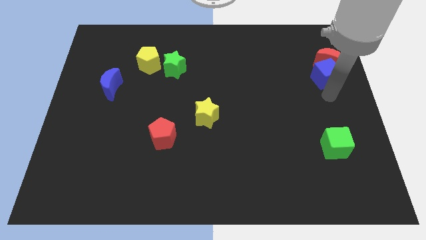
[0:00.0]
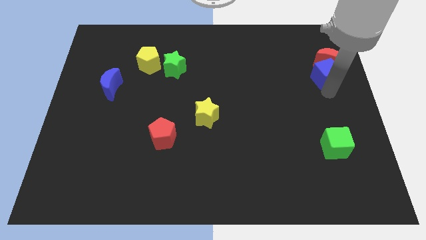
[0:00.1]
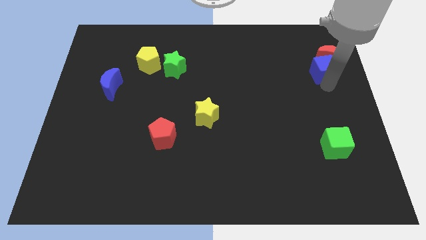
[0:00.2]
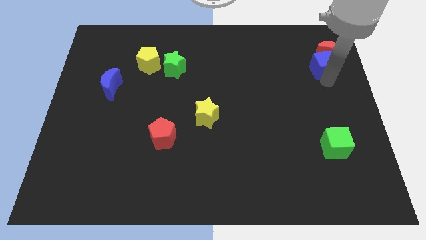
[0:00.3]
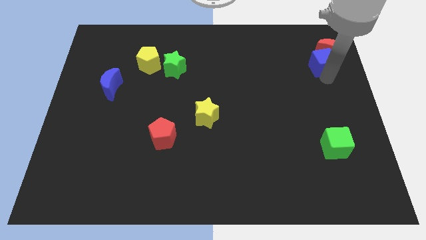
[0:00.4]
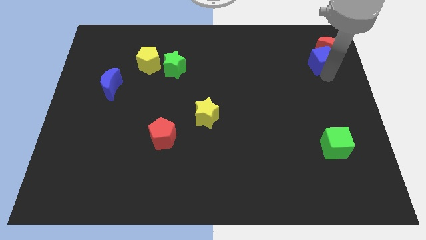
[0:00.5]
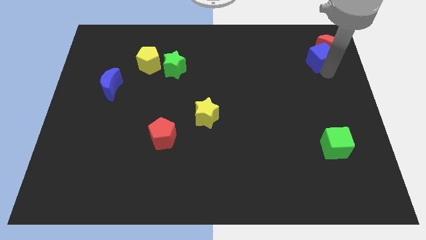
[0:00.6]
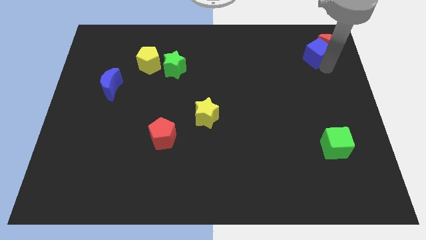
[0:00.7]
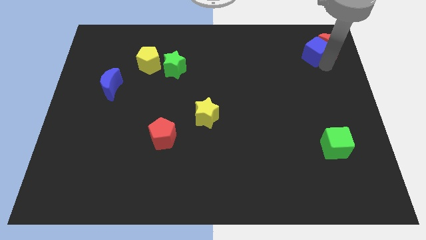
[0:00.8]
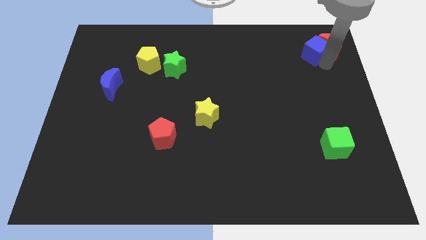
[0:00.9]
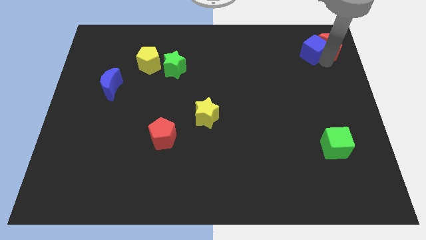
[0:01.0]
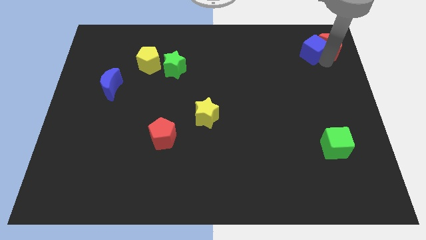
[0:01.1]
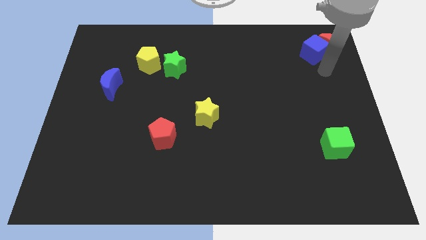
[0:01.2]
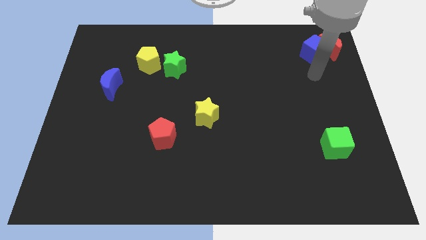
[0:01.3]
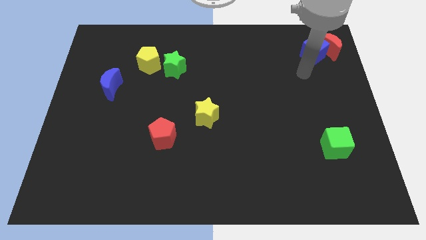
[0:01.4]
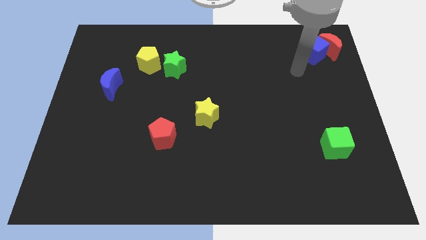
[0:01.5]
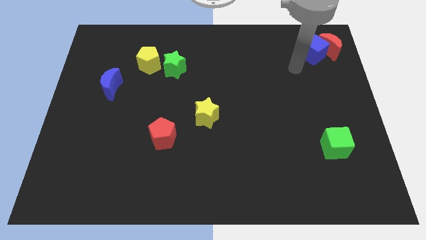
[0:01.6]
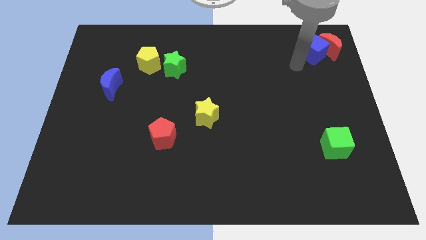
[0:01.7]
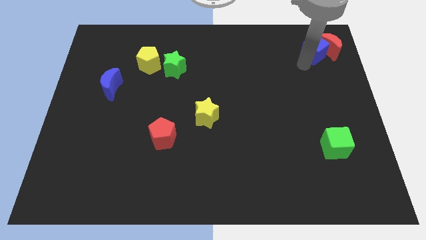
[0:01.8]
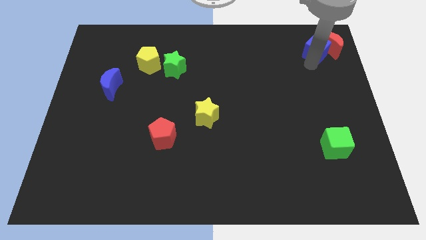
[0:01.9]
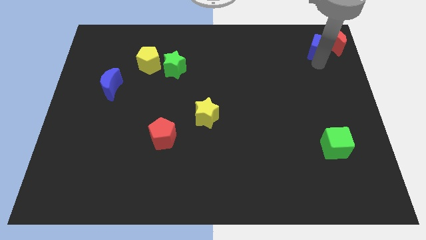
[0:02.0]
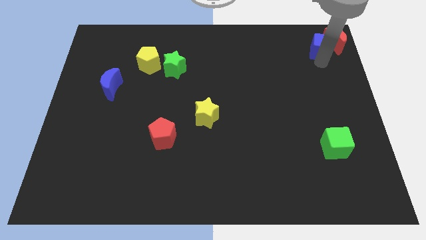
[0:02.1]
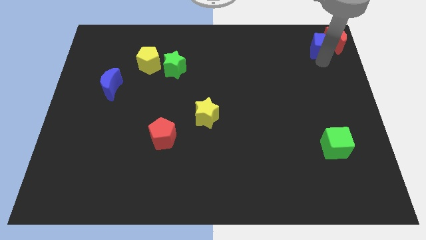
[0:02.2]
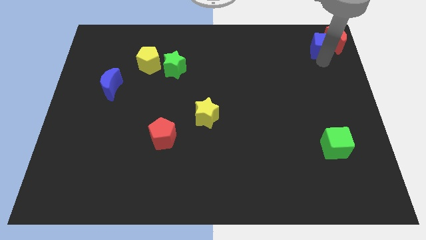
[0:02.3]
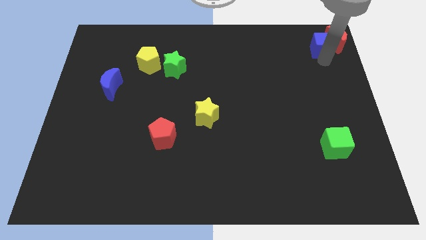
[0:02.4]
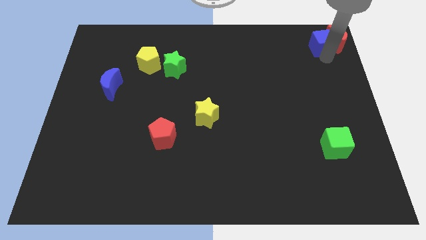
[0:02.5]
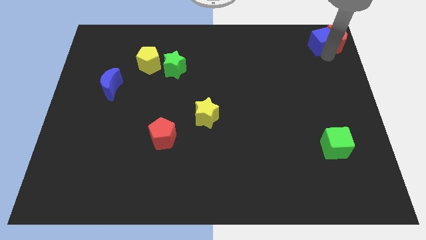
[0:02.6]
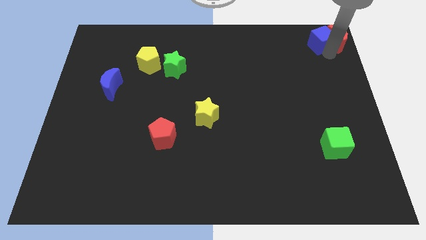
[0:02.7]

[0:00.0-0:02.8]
push the blue moon and red crescent to the top right corner

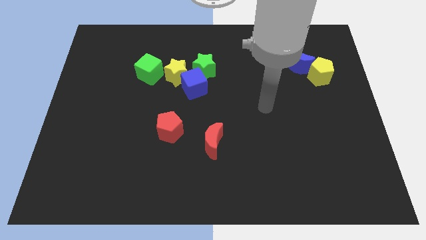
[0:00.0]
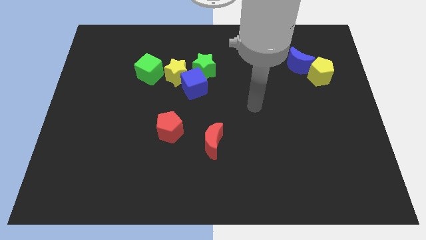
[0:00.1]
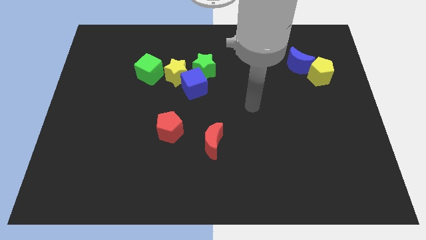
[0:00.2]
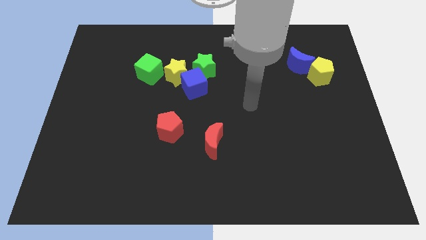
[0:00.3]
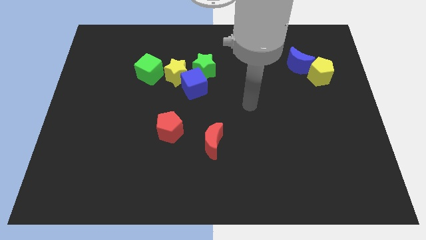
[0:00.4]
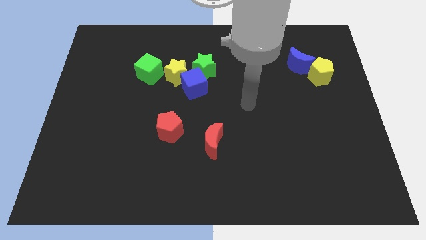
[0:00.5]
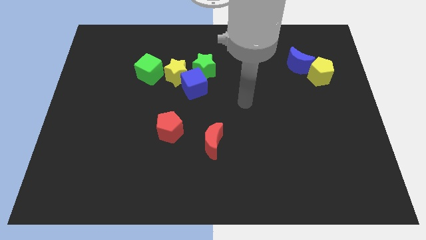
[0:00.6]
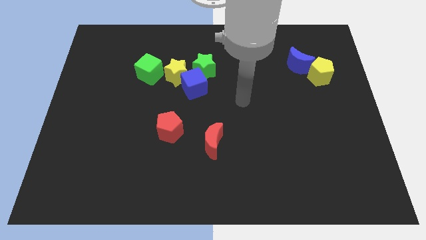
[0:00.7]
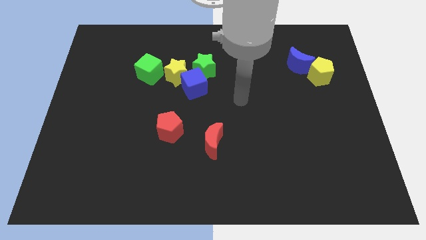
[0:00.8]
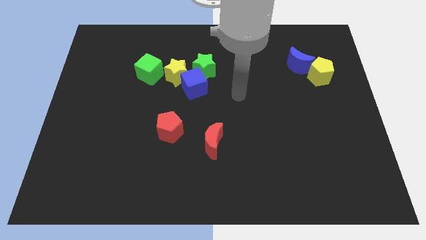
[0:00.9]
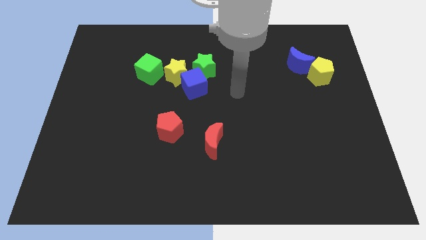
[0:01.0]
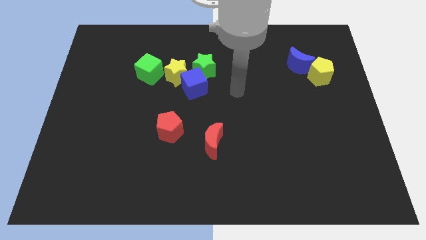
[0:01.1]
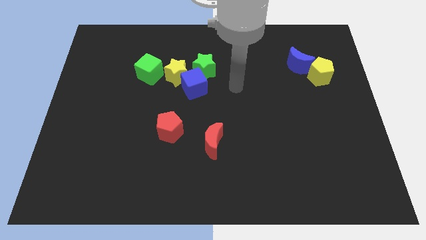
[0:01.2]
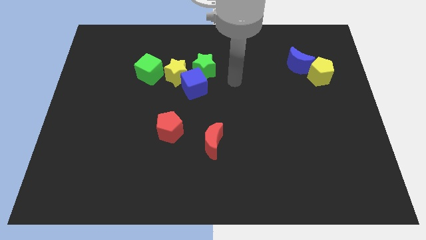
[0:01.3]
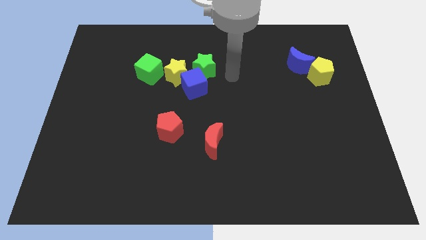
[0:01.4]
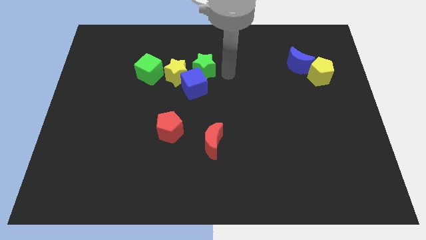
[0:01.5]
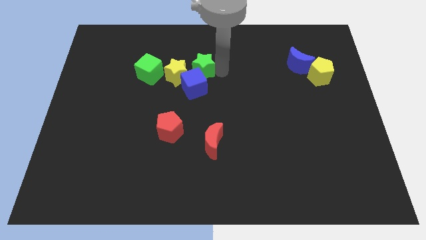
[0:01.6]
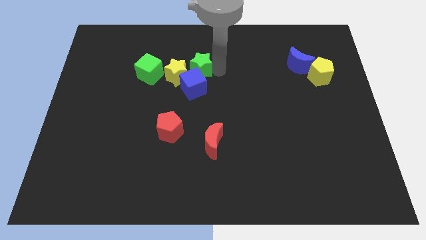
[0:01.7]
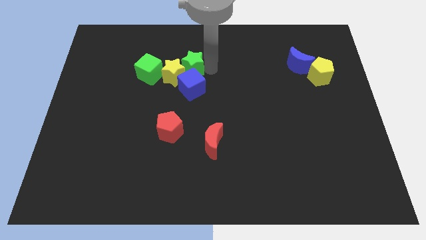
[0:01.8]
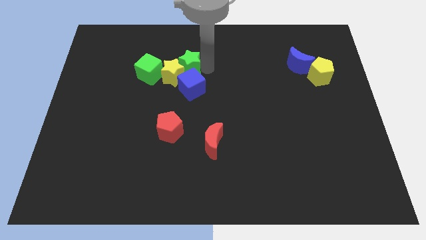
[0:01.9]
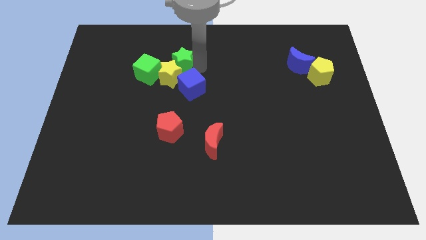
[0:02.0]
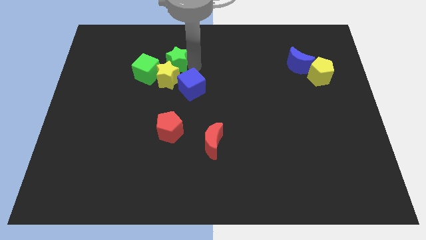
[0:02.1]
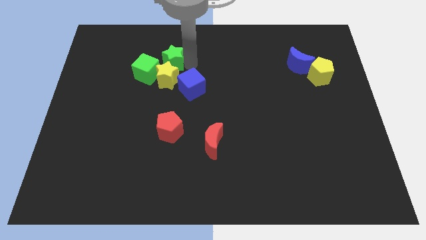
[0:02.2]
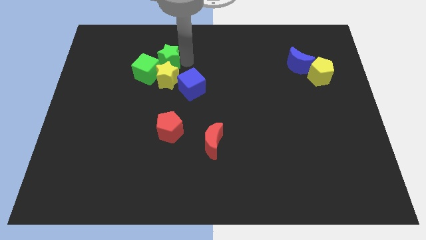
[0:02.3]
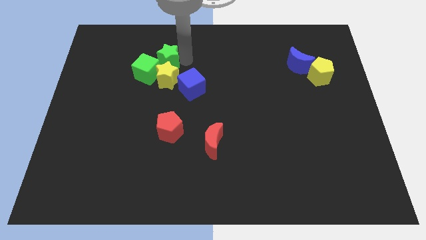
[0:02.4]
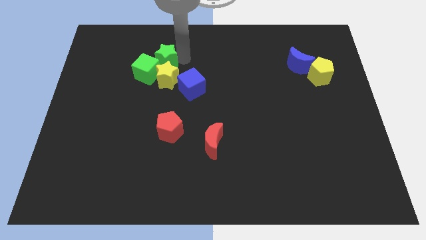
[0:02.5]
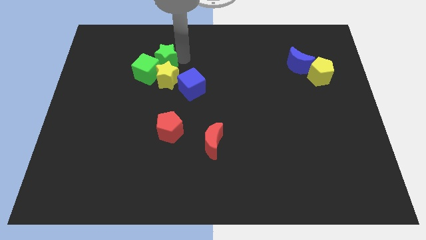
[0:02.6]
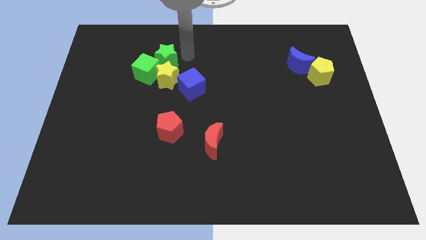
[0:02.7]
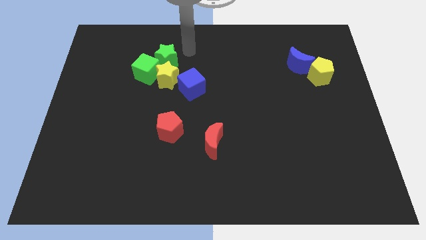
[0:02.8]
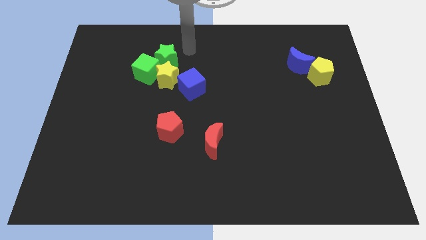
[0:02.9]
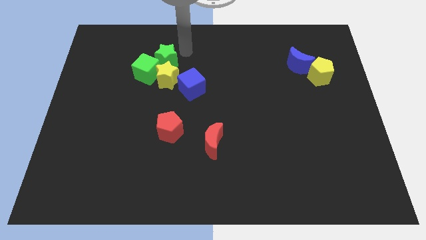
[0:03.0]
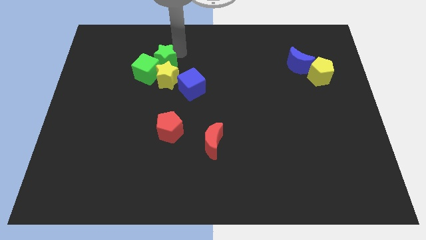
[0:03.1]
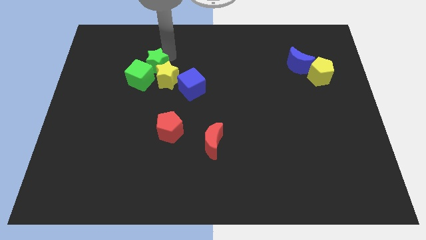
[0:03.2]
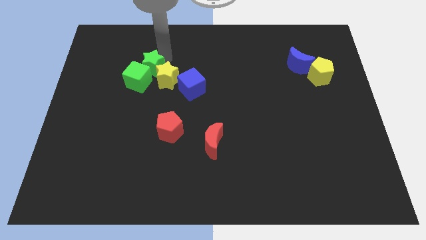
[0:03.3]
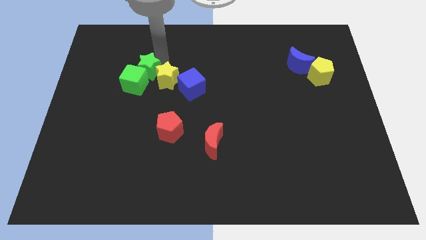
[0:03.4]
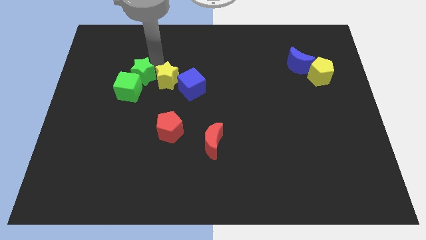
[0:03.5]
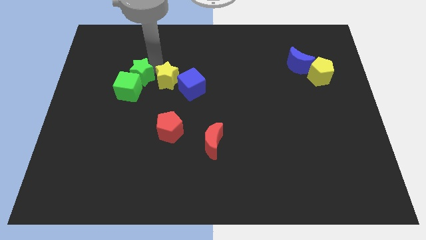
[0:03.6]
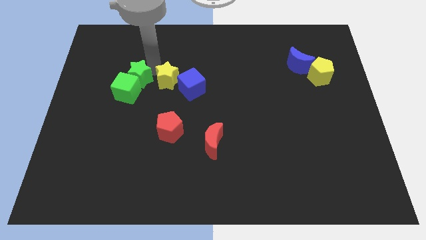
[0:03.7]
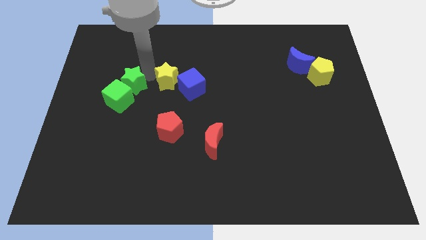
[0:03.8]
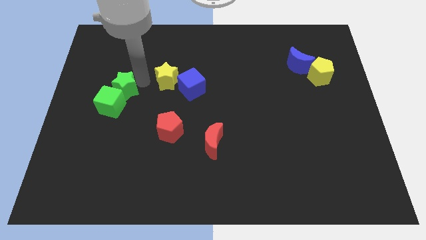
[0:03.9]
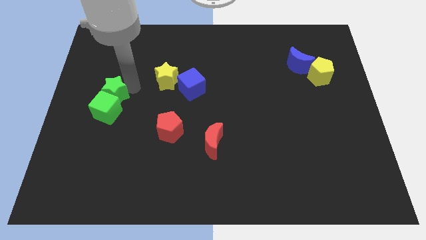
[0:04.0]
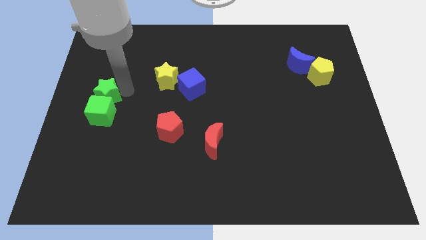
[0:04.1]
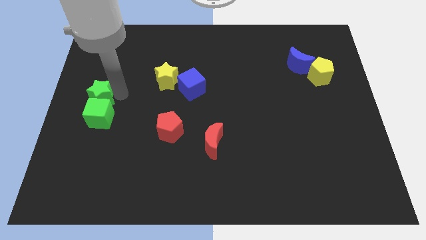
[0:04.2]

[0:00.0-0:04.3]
move green star and green cube towards the left center

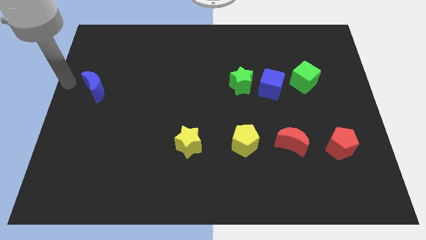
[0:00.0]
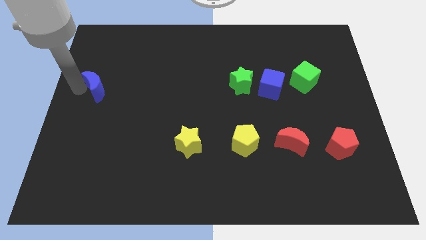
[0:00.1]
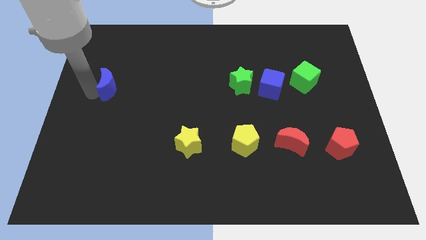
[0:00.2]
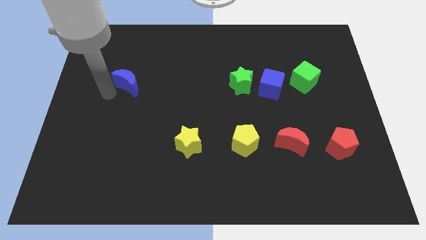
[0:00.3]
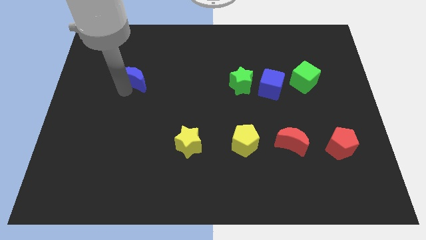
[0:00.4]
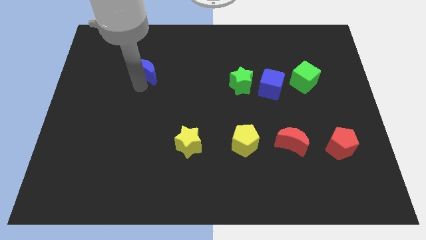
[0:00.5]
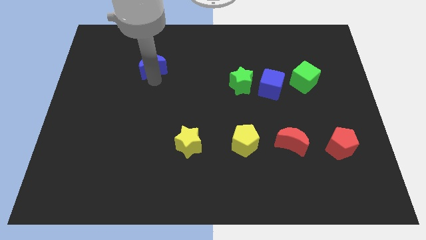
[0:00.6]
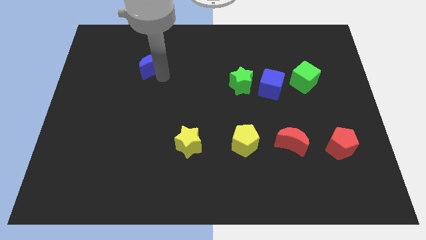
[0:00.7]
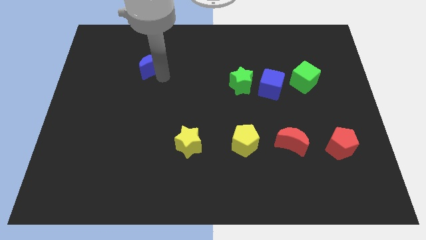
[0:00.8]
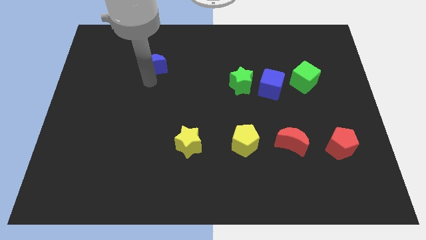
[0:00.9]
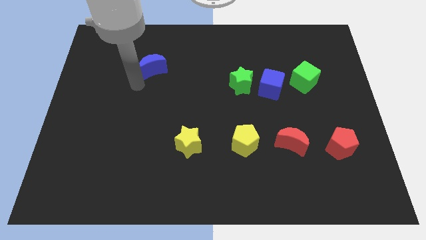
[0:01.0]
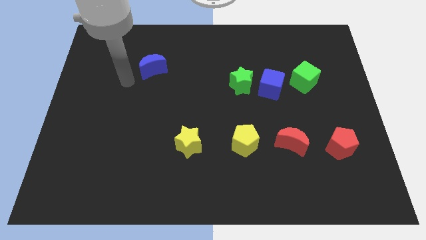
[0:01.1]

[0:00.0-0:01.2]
move the blue crescent towards the top

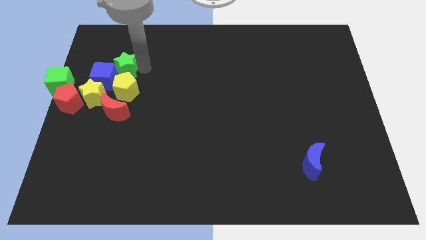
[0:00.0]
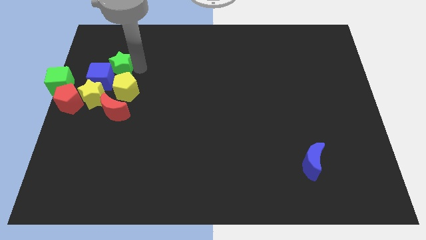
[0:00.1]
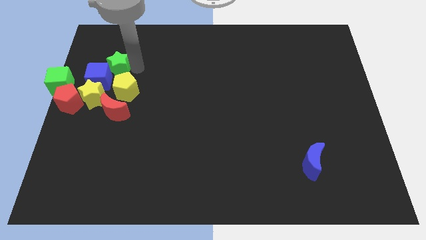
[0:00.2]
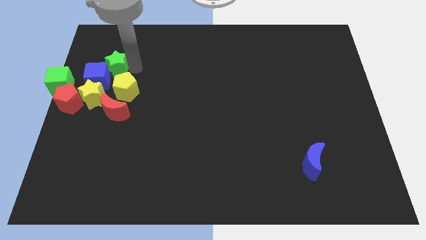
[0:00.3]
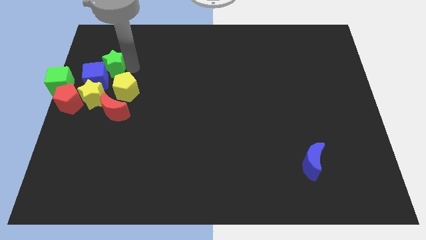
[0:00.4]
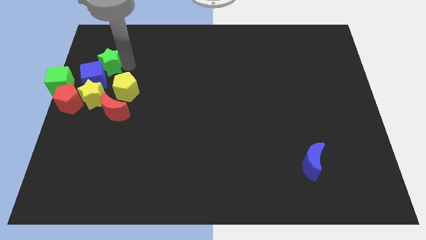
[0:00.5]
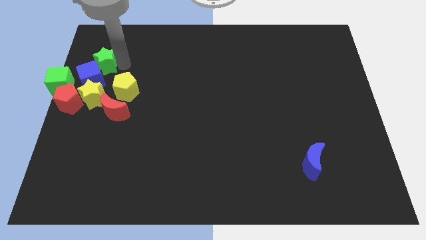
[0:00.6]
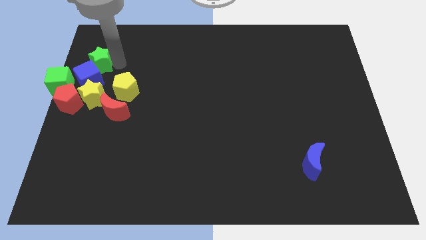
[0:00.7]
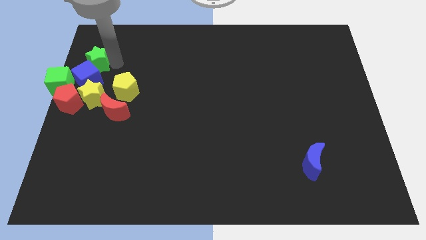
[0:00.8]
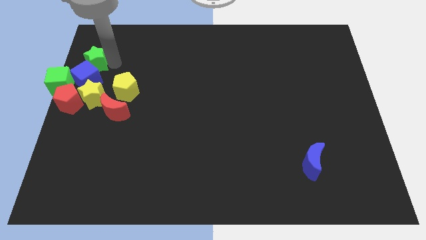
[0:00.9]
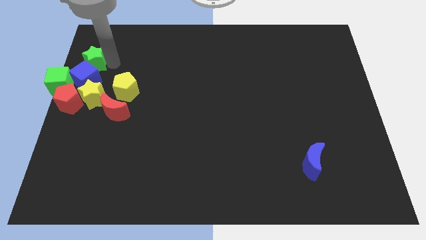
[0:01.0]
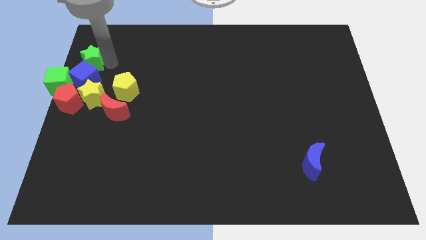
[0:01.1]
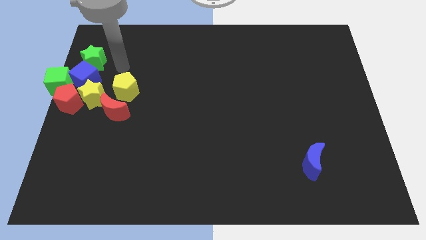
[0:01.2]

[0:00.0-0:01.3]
place green star to the top of blue cube
